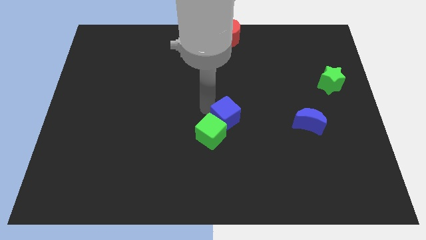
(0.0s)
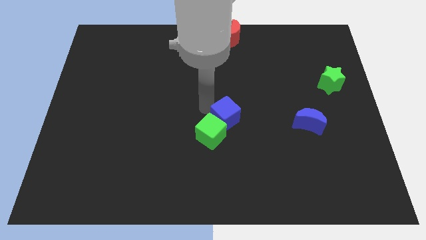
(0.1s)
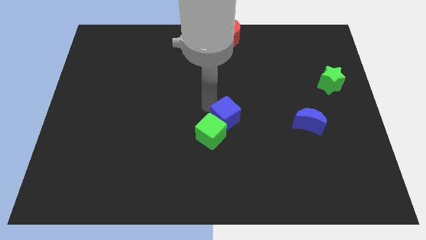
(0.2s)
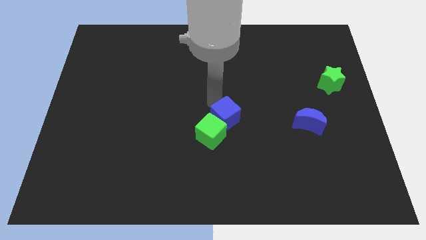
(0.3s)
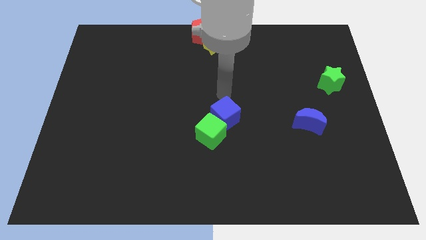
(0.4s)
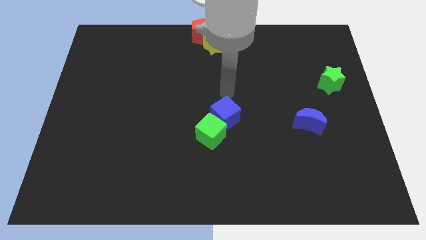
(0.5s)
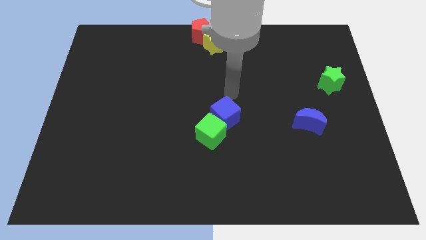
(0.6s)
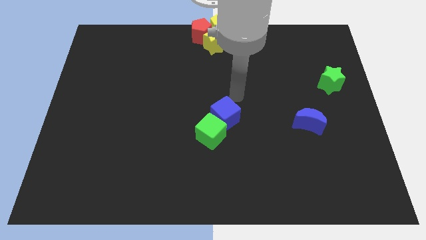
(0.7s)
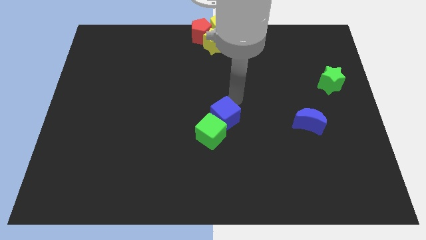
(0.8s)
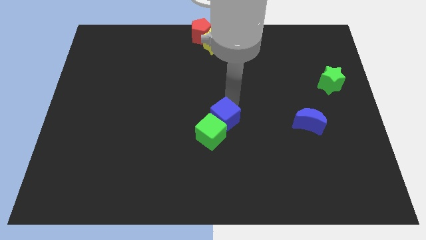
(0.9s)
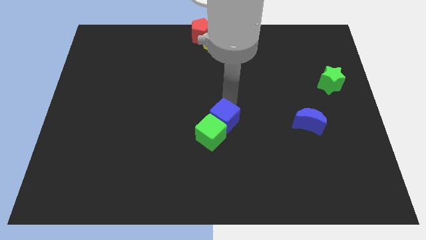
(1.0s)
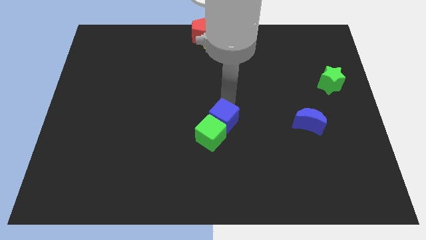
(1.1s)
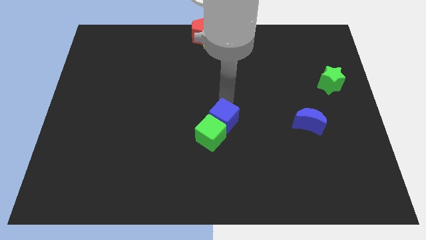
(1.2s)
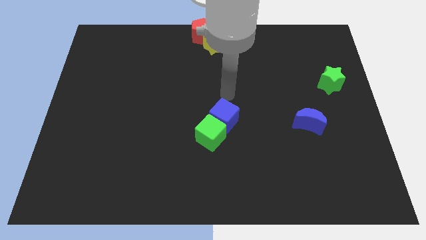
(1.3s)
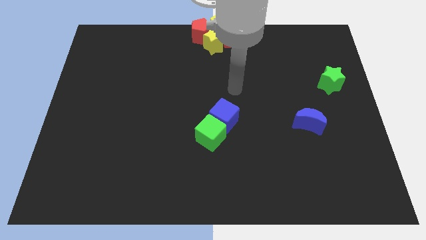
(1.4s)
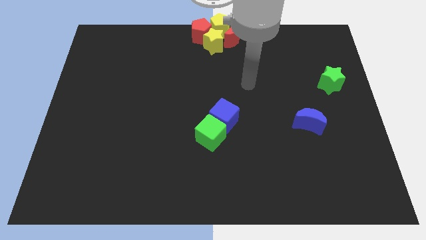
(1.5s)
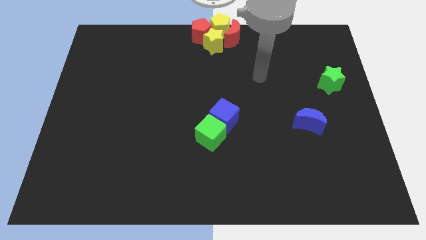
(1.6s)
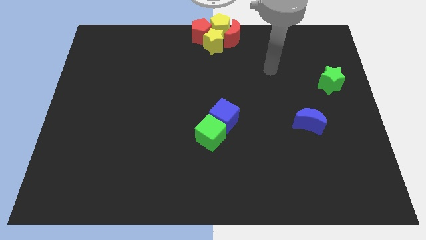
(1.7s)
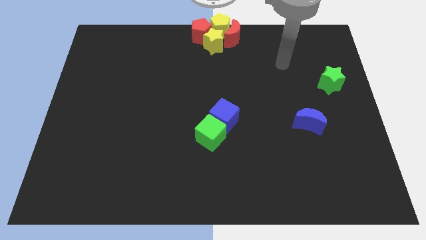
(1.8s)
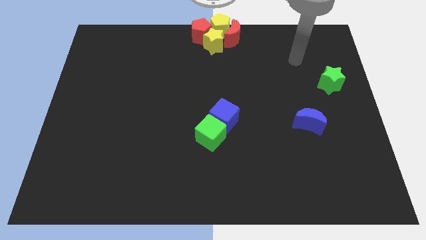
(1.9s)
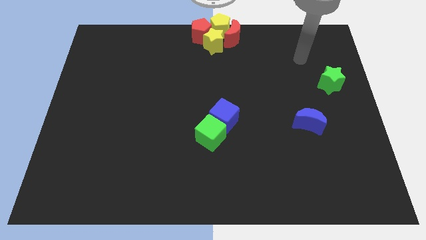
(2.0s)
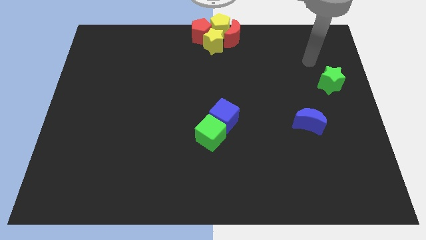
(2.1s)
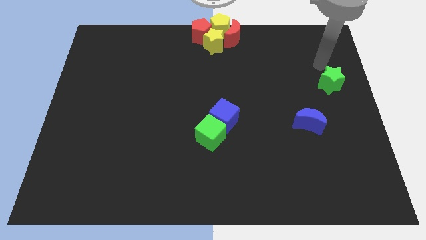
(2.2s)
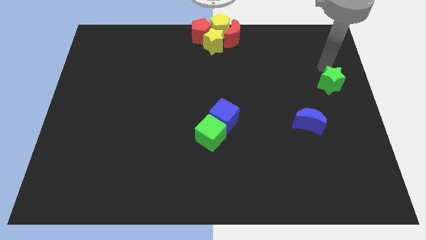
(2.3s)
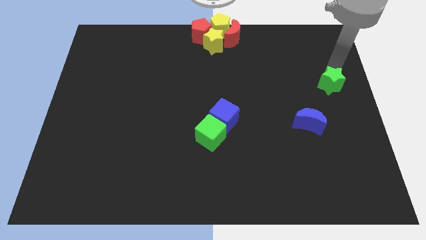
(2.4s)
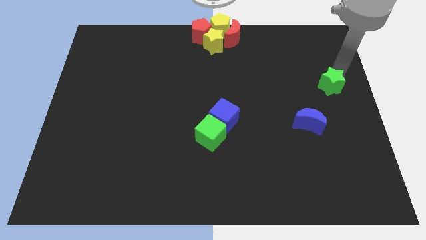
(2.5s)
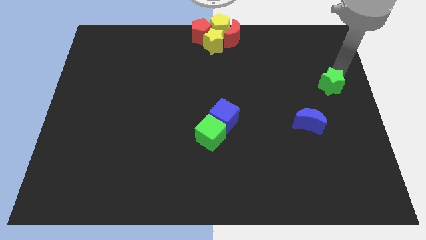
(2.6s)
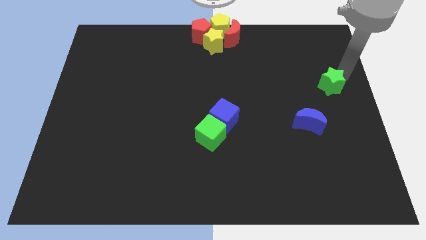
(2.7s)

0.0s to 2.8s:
move your arm from blue cube to green star

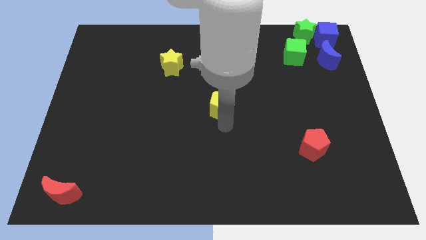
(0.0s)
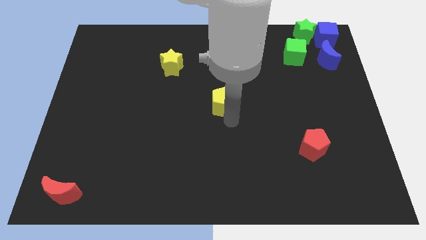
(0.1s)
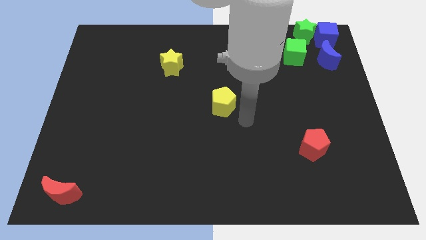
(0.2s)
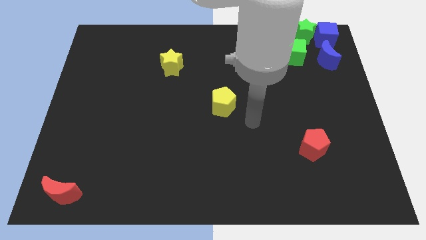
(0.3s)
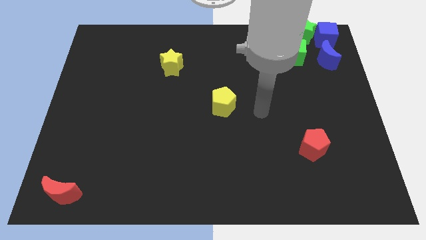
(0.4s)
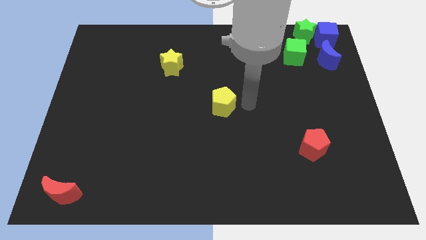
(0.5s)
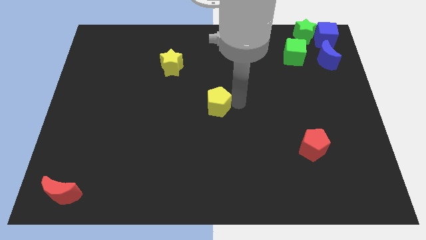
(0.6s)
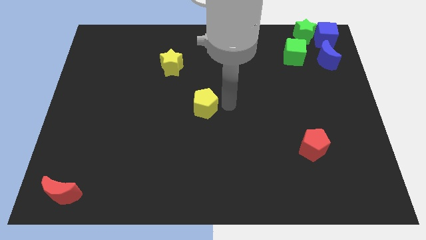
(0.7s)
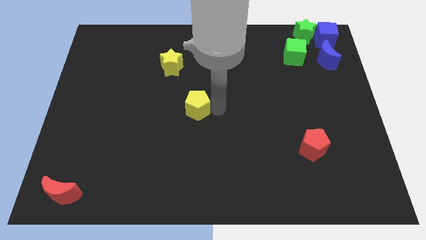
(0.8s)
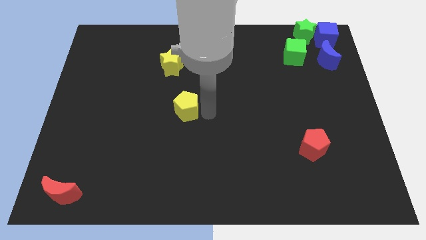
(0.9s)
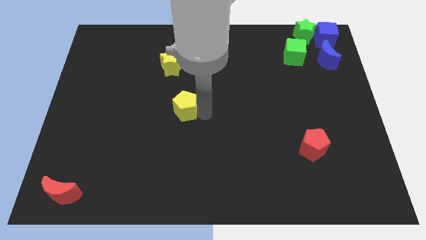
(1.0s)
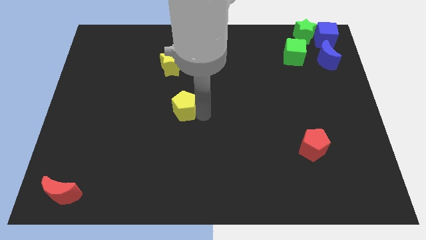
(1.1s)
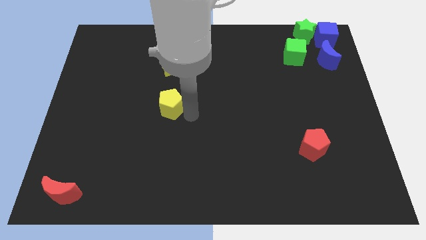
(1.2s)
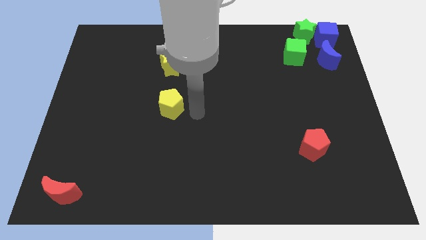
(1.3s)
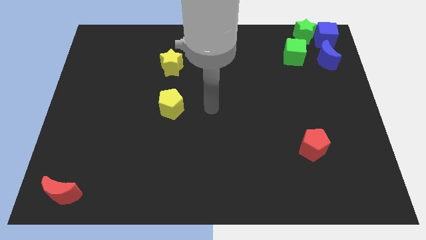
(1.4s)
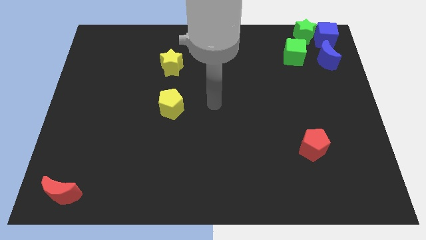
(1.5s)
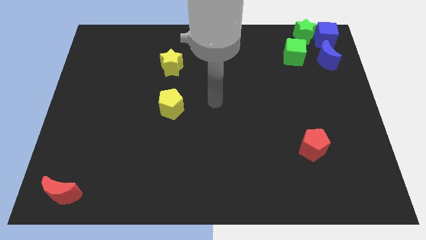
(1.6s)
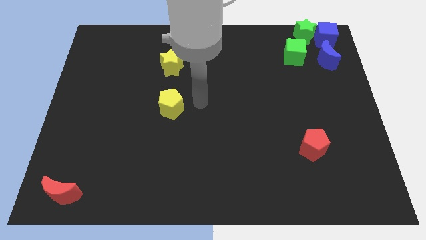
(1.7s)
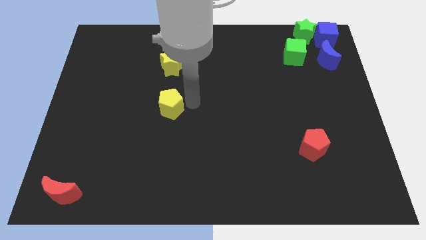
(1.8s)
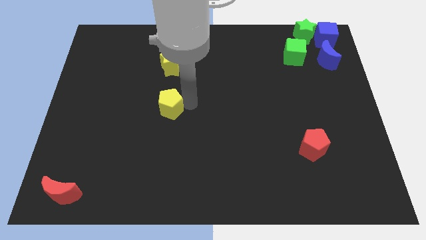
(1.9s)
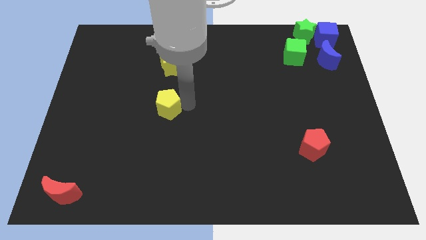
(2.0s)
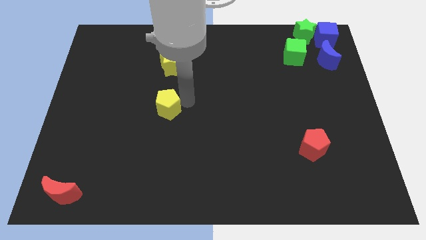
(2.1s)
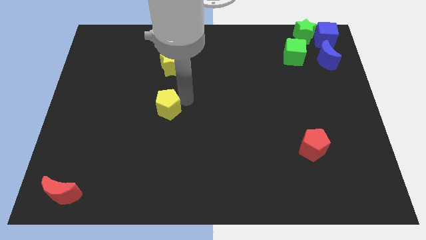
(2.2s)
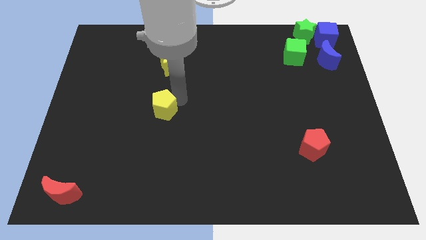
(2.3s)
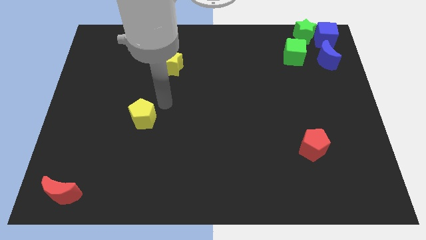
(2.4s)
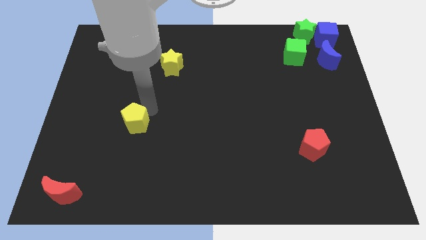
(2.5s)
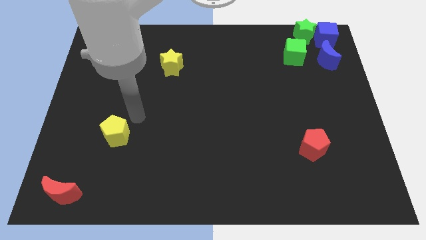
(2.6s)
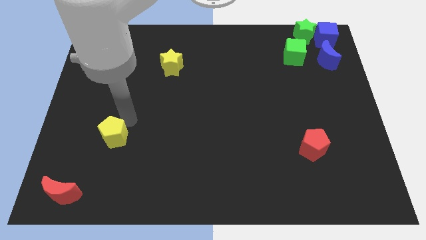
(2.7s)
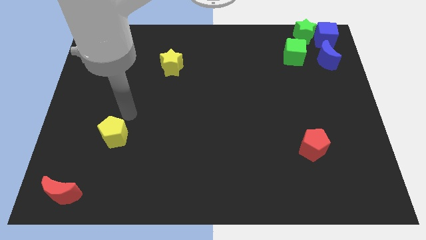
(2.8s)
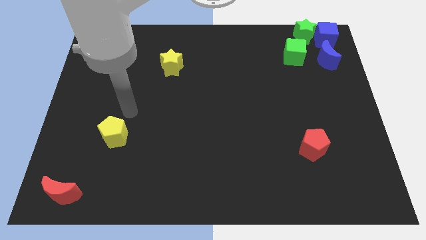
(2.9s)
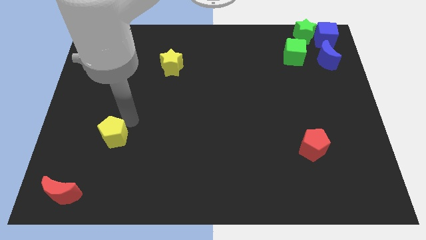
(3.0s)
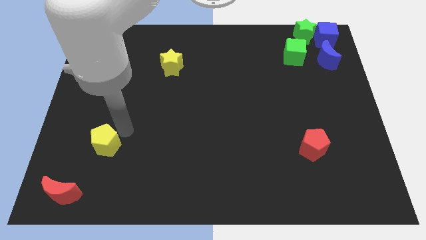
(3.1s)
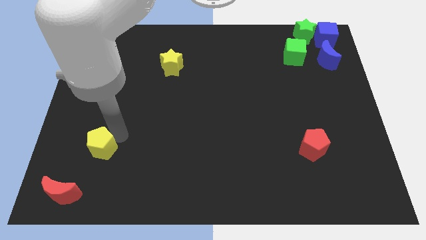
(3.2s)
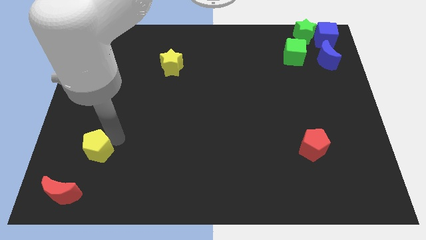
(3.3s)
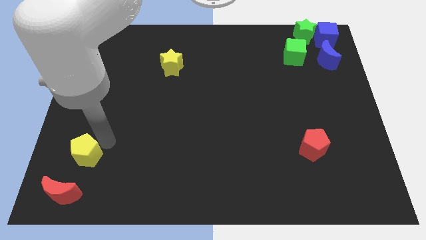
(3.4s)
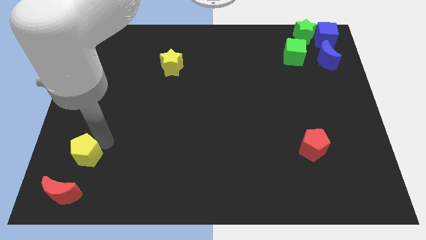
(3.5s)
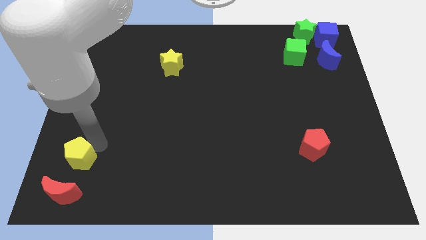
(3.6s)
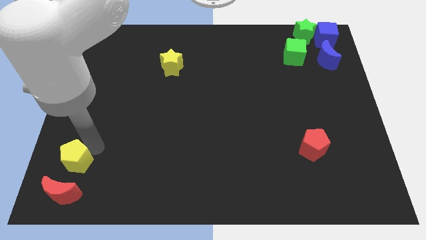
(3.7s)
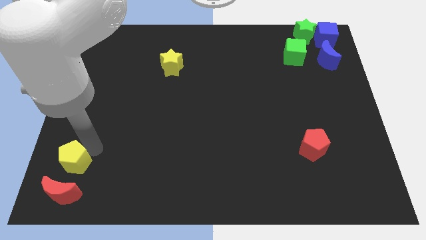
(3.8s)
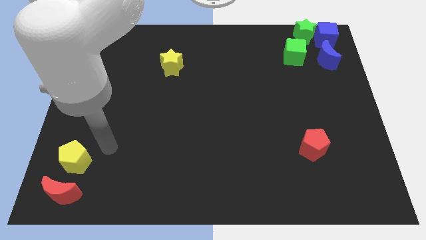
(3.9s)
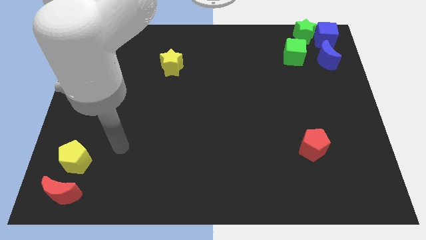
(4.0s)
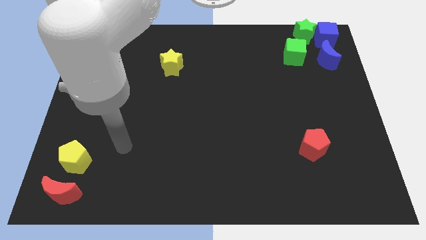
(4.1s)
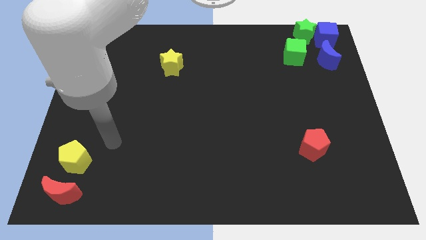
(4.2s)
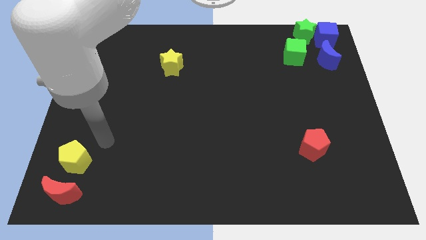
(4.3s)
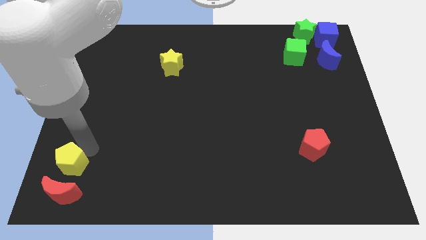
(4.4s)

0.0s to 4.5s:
move the yellow pentagon above the red moon

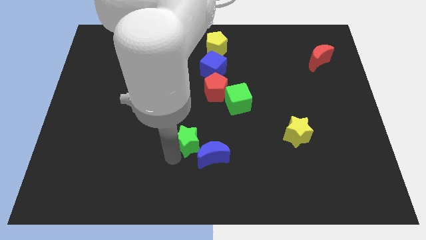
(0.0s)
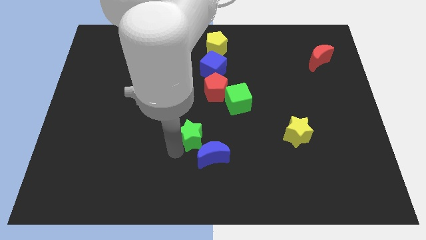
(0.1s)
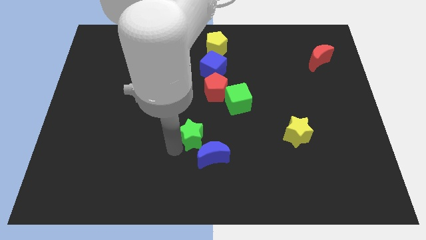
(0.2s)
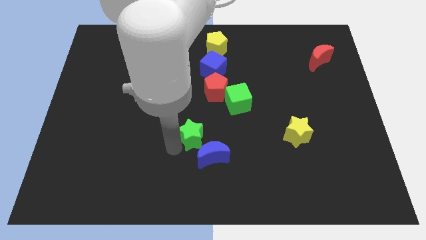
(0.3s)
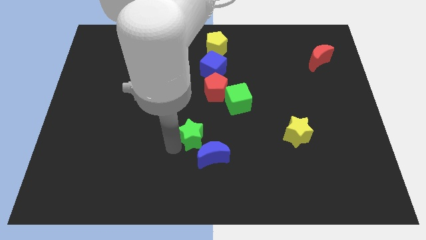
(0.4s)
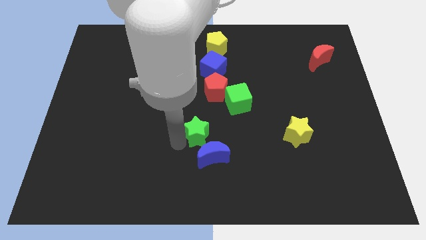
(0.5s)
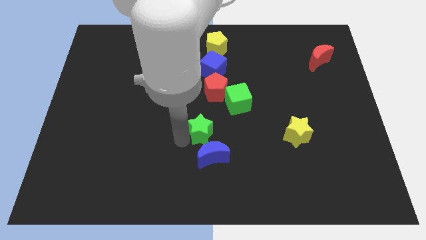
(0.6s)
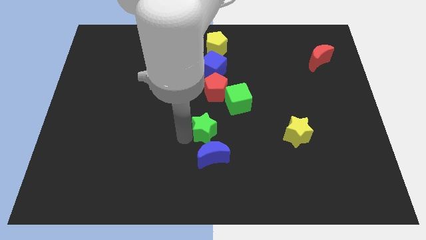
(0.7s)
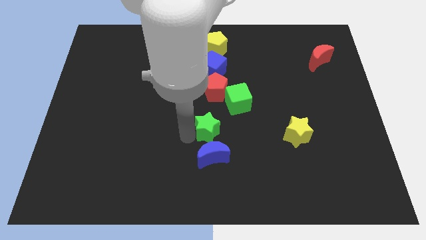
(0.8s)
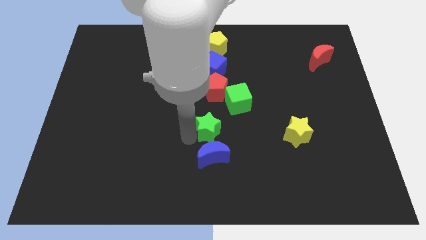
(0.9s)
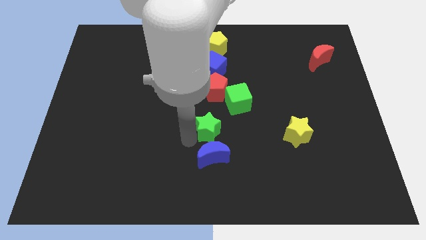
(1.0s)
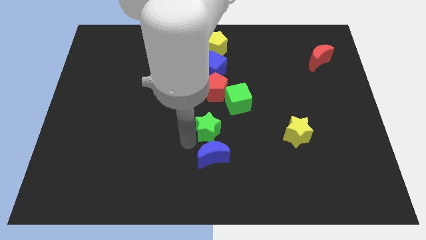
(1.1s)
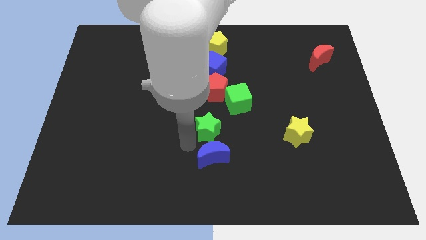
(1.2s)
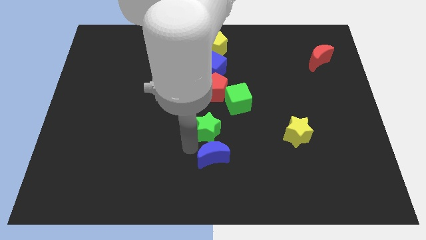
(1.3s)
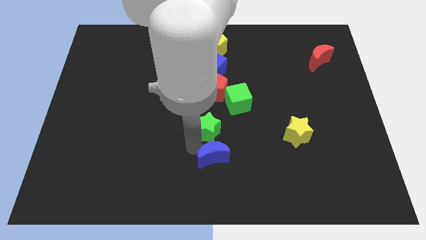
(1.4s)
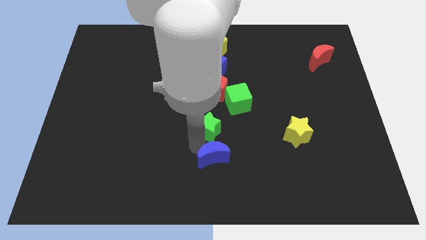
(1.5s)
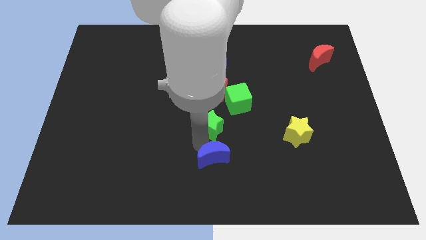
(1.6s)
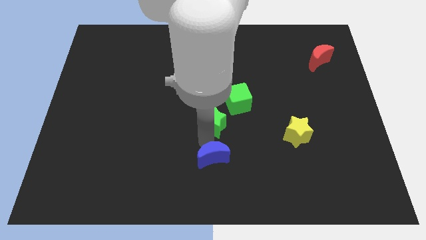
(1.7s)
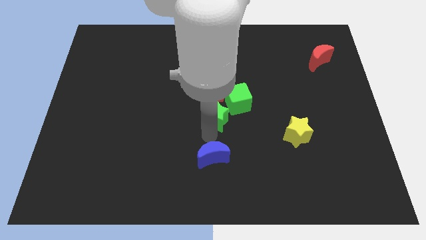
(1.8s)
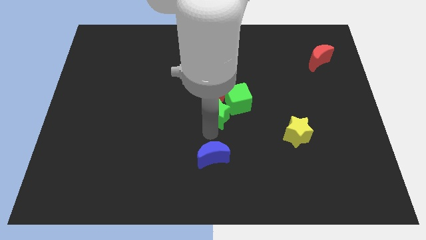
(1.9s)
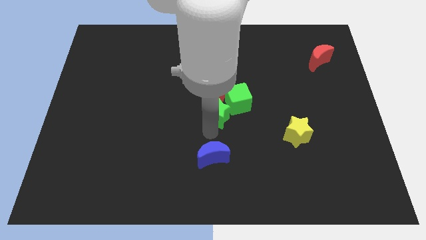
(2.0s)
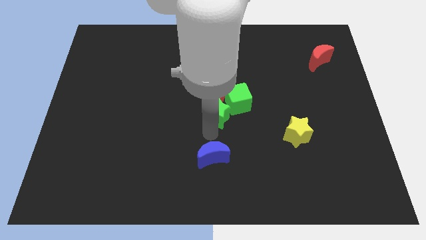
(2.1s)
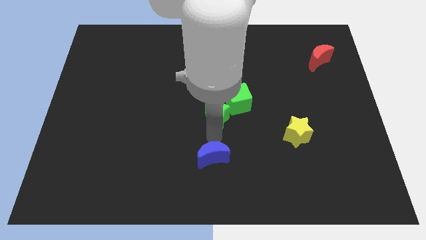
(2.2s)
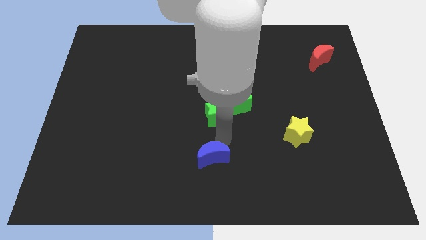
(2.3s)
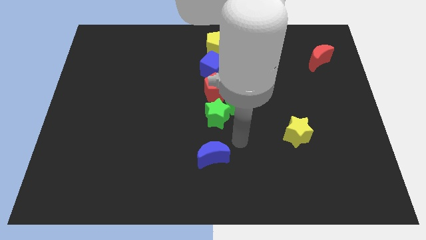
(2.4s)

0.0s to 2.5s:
move the green star to the left of the green cube
